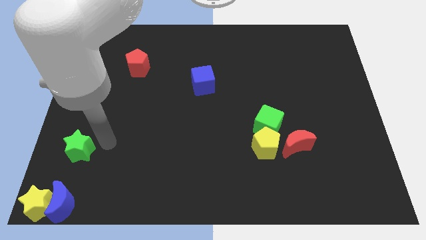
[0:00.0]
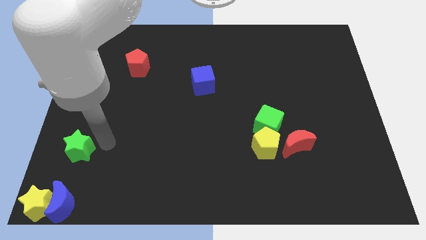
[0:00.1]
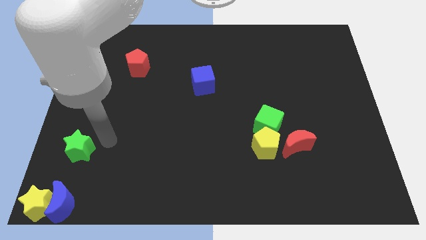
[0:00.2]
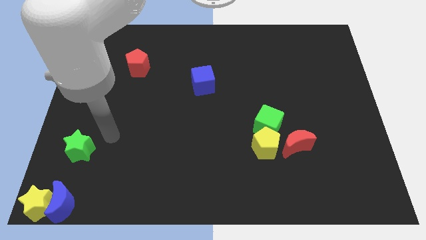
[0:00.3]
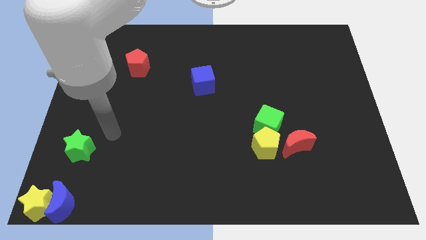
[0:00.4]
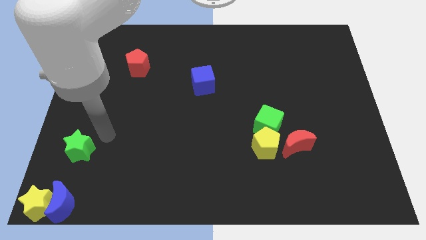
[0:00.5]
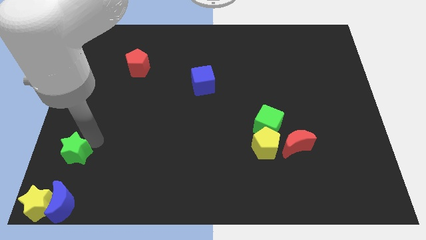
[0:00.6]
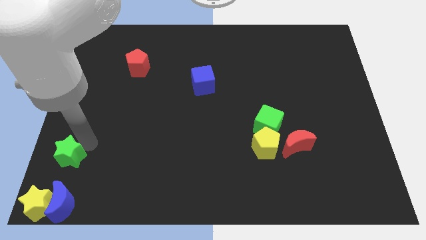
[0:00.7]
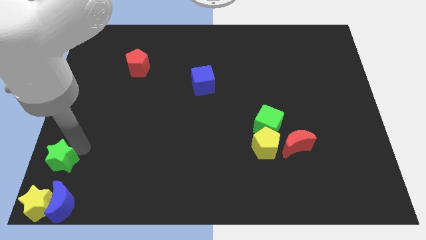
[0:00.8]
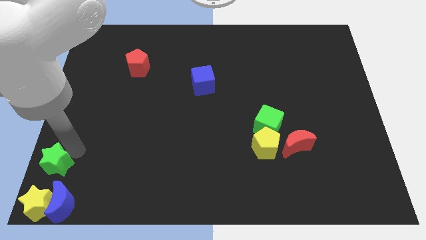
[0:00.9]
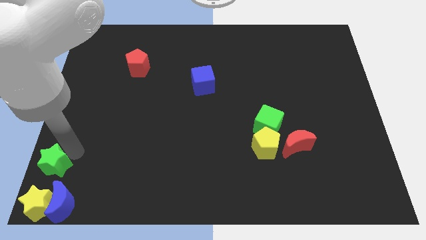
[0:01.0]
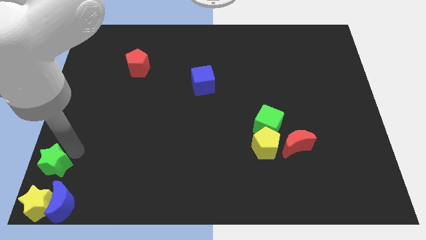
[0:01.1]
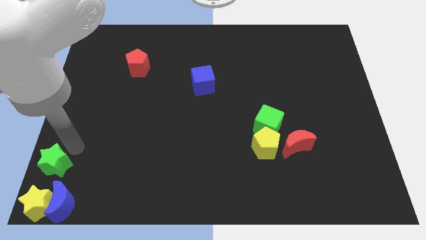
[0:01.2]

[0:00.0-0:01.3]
put the green star above the yellow star and blue moon

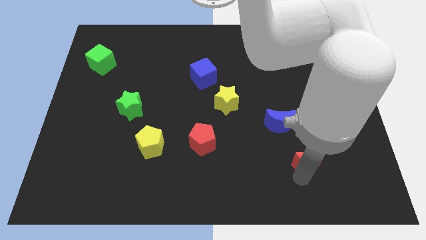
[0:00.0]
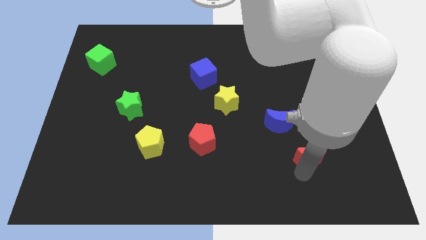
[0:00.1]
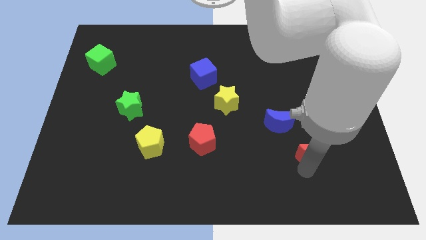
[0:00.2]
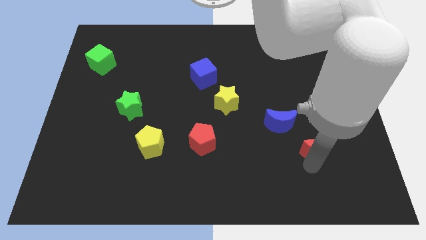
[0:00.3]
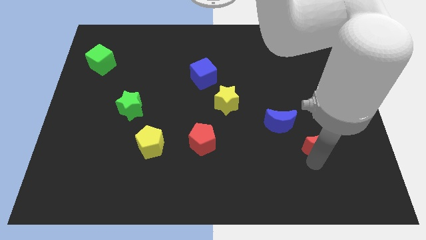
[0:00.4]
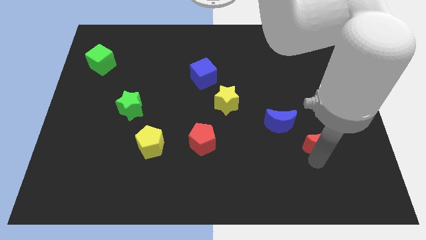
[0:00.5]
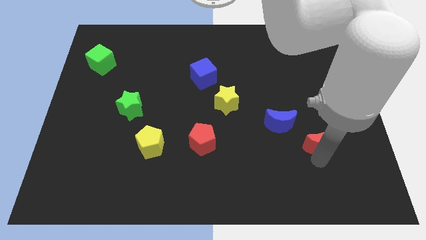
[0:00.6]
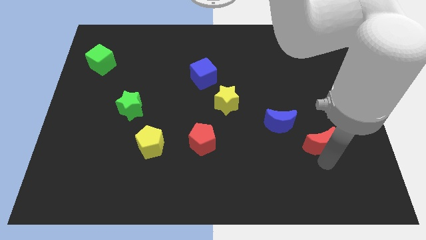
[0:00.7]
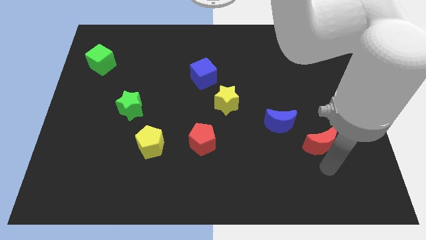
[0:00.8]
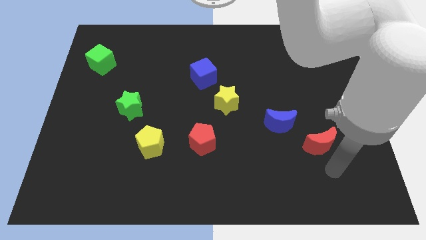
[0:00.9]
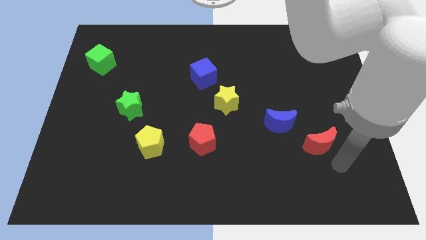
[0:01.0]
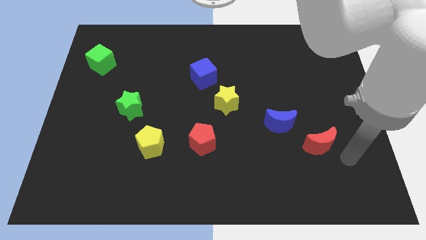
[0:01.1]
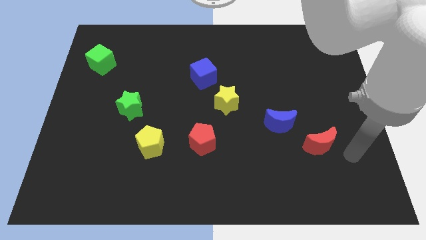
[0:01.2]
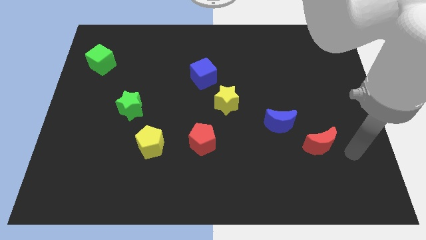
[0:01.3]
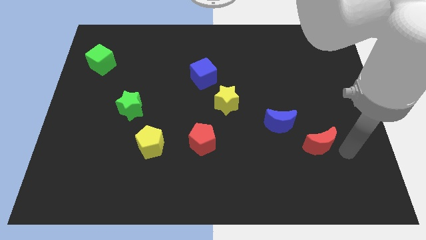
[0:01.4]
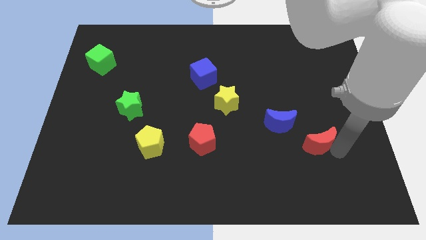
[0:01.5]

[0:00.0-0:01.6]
place the red crescent below the blue crescent

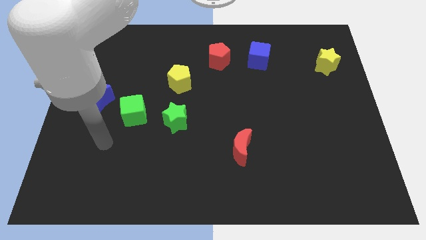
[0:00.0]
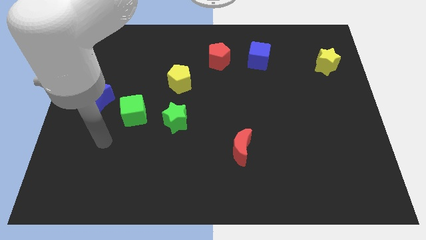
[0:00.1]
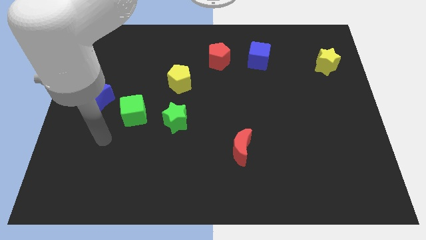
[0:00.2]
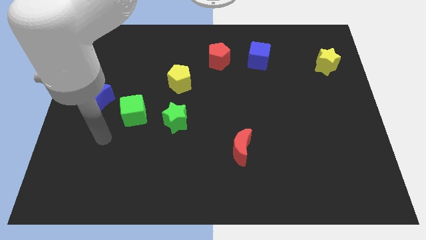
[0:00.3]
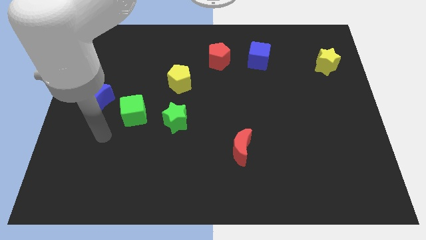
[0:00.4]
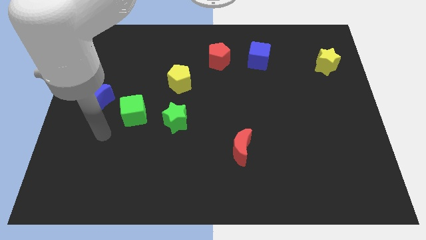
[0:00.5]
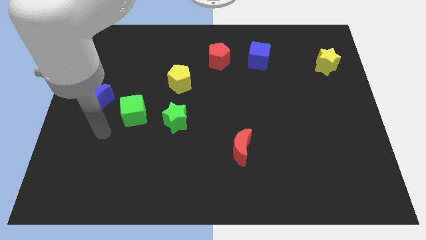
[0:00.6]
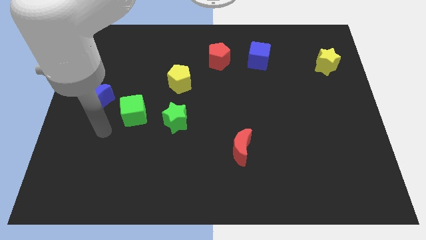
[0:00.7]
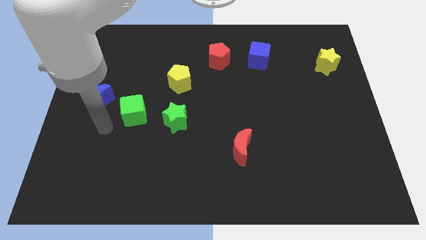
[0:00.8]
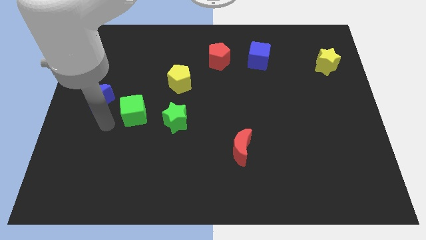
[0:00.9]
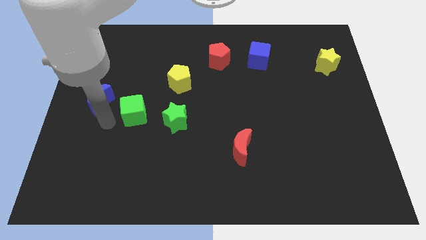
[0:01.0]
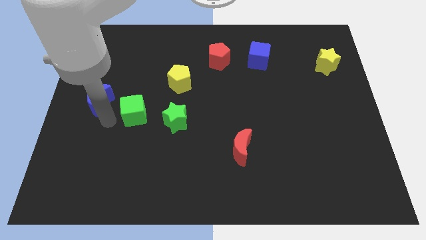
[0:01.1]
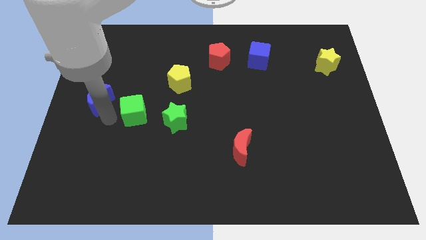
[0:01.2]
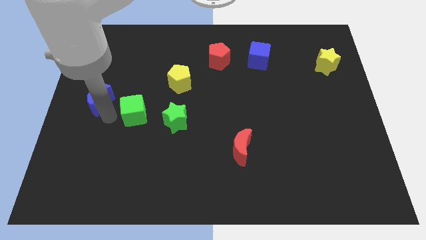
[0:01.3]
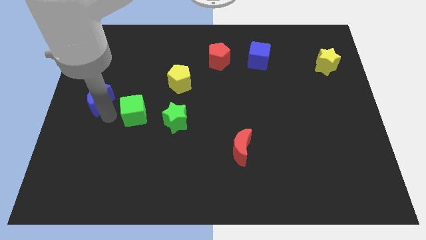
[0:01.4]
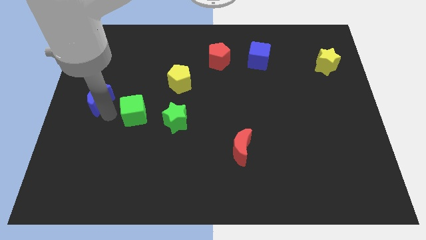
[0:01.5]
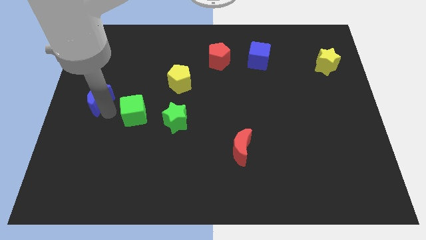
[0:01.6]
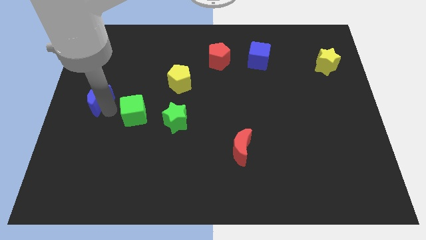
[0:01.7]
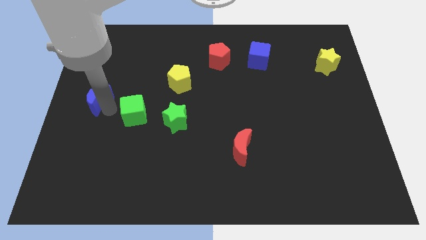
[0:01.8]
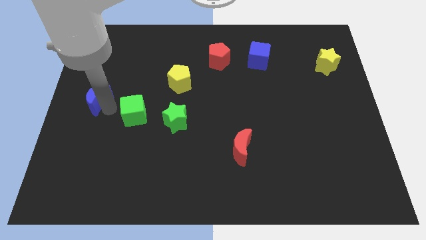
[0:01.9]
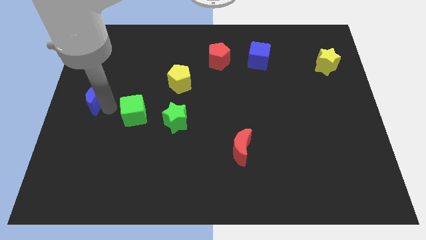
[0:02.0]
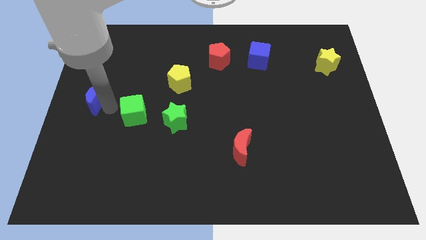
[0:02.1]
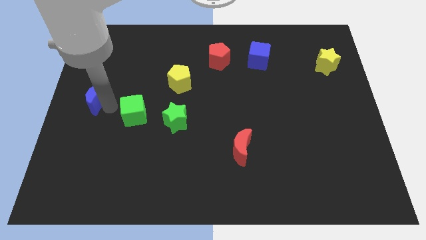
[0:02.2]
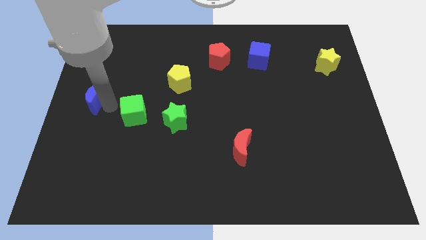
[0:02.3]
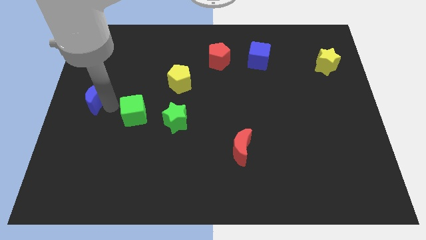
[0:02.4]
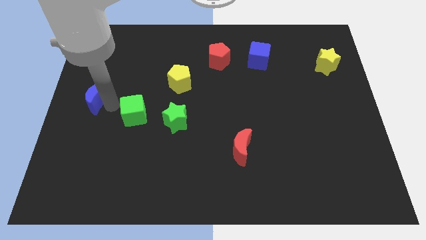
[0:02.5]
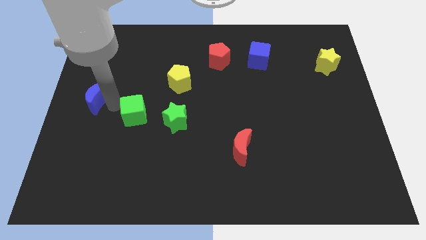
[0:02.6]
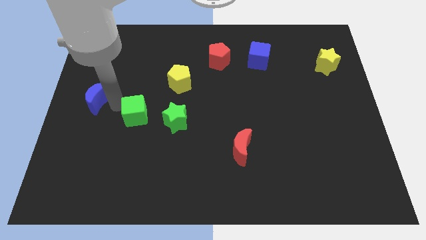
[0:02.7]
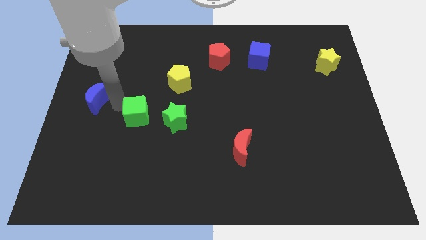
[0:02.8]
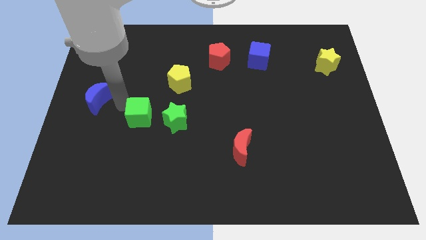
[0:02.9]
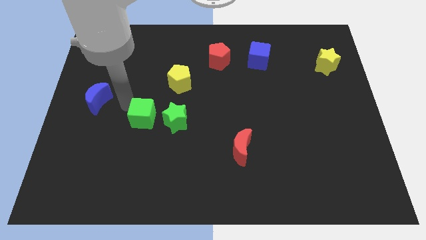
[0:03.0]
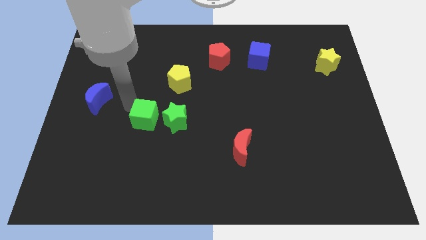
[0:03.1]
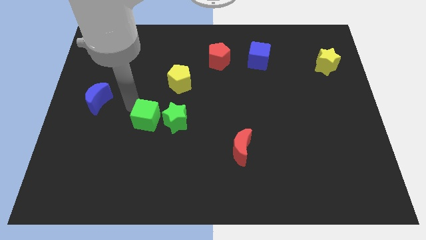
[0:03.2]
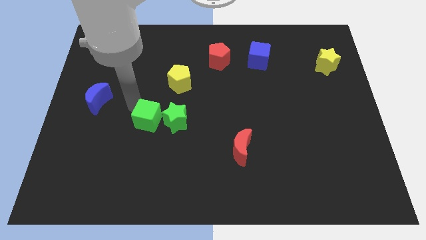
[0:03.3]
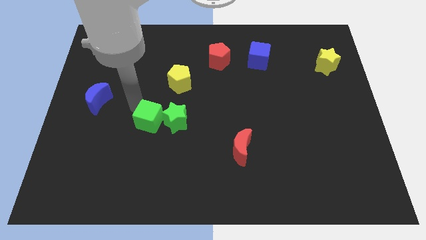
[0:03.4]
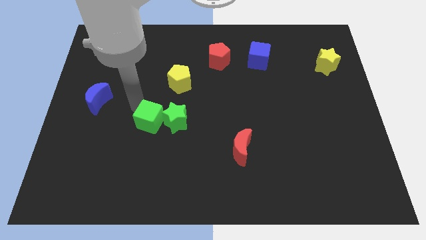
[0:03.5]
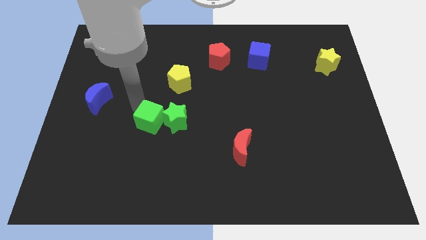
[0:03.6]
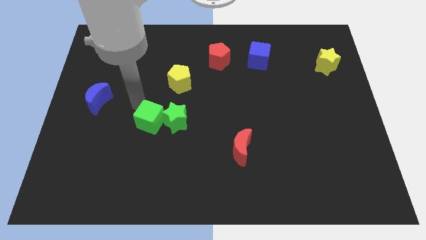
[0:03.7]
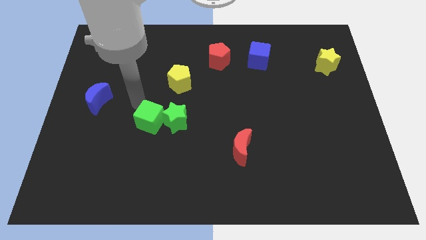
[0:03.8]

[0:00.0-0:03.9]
make the green cube touch the left side of the green star

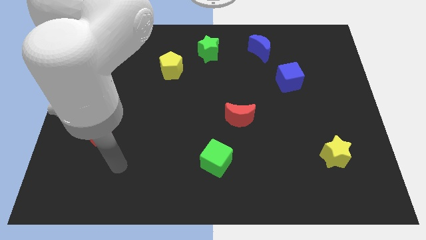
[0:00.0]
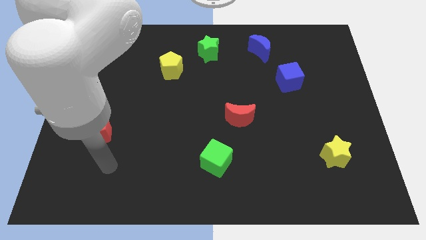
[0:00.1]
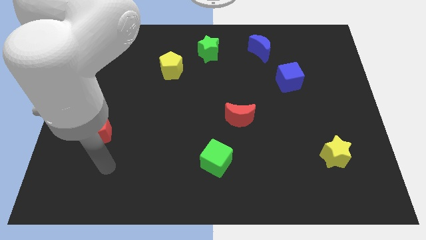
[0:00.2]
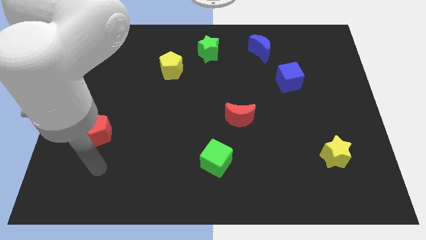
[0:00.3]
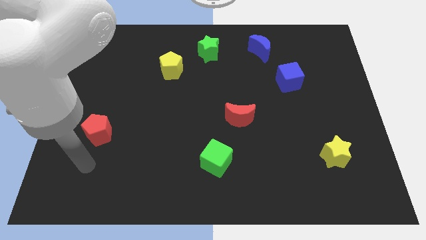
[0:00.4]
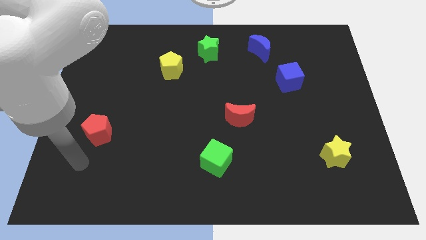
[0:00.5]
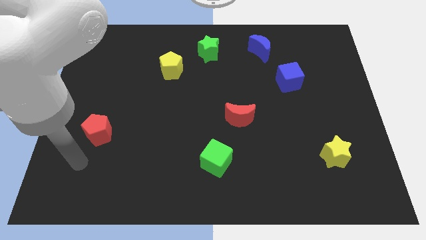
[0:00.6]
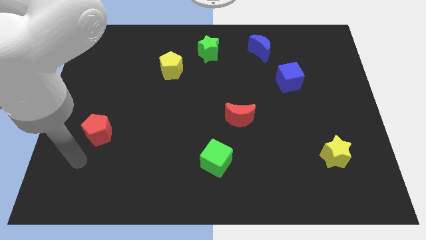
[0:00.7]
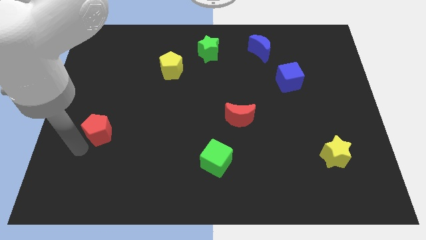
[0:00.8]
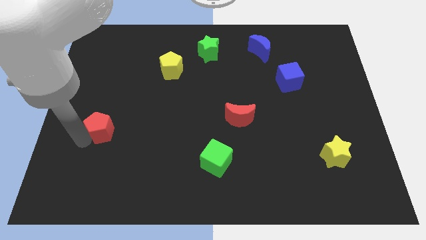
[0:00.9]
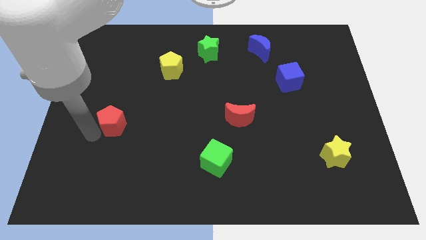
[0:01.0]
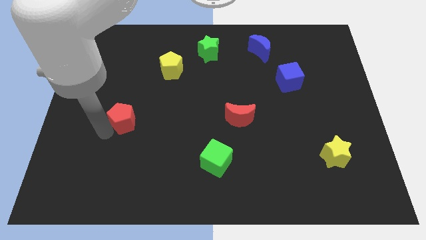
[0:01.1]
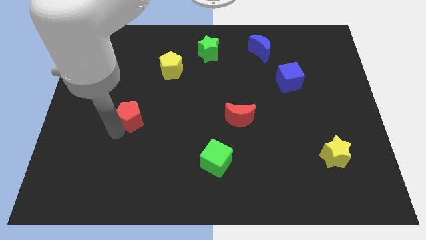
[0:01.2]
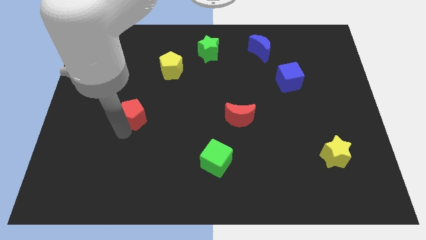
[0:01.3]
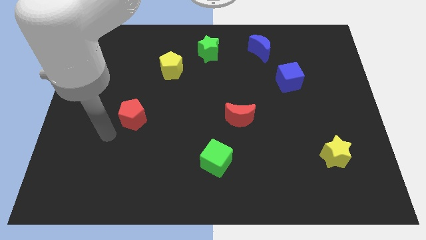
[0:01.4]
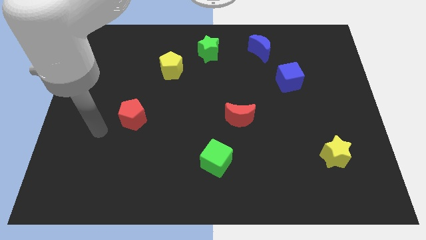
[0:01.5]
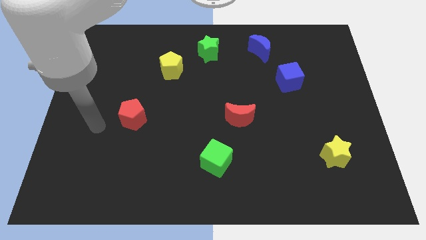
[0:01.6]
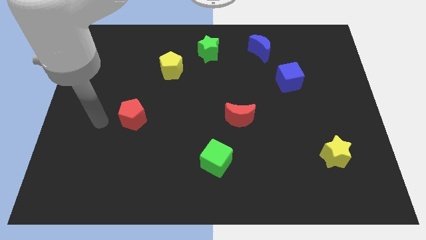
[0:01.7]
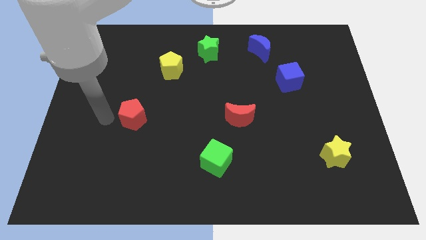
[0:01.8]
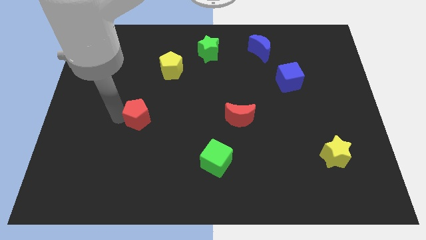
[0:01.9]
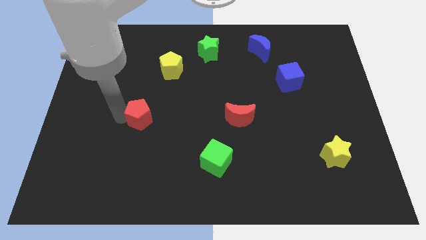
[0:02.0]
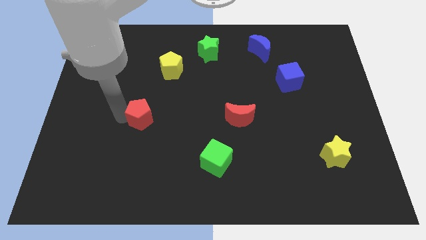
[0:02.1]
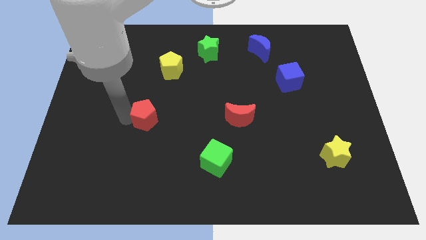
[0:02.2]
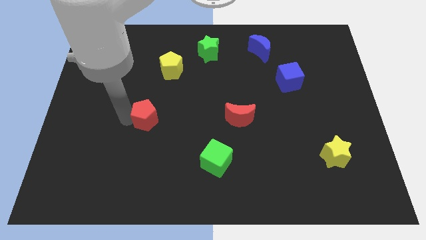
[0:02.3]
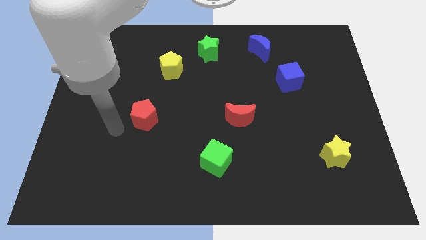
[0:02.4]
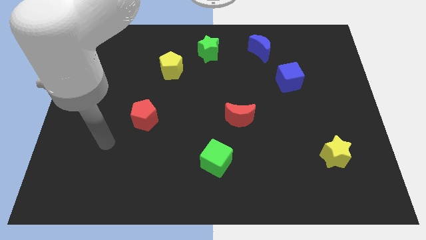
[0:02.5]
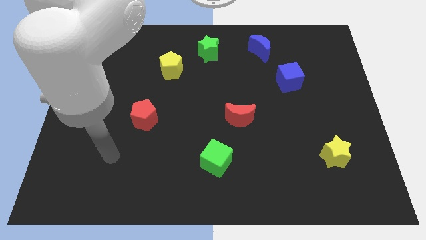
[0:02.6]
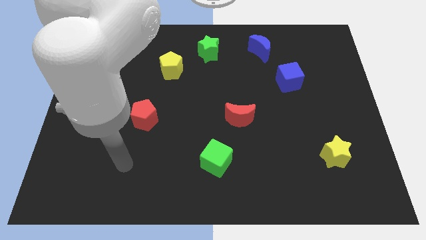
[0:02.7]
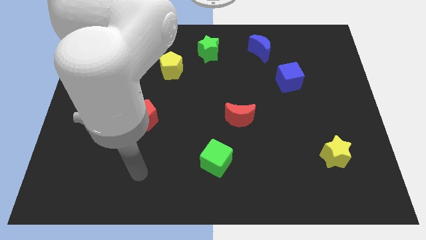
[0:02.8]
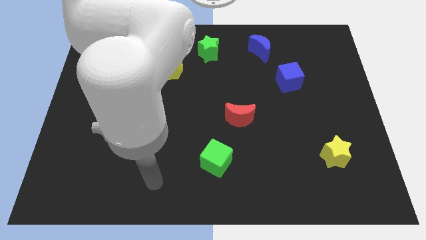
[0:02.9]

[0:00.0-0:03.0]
place the red pentagon to the left of the red moon
